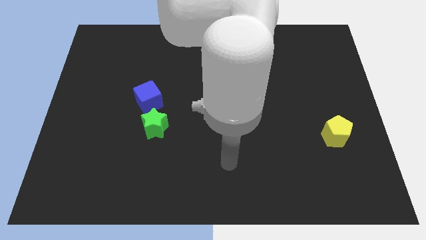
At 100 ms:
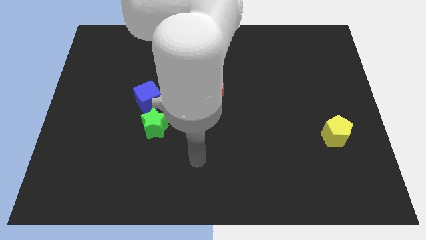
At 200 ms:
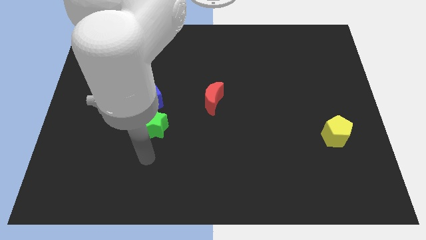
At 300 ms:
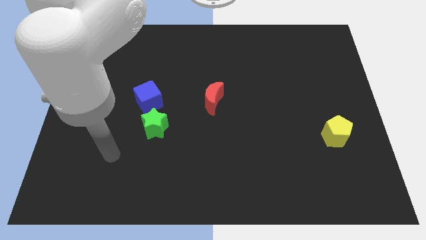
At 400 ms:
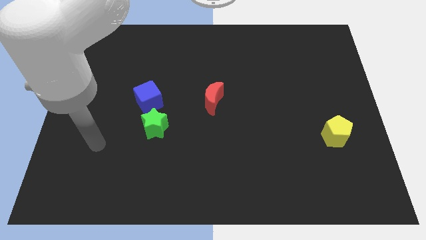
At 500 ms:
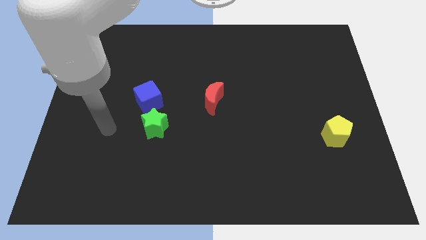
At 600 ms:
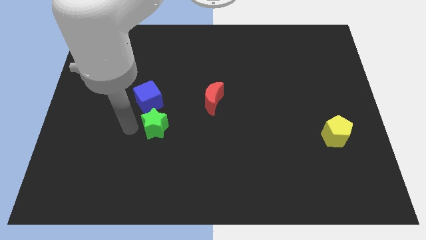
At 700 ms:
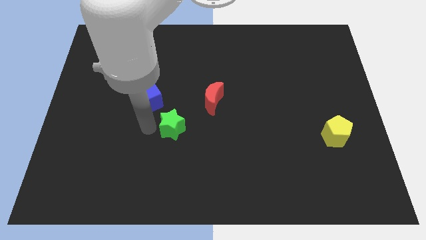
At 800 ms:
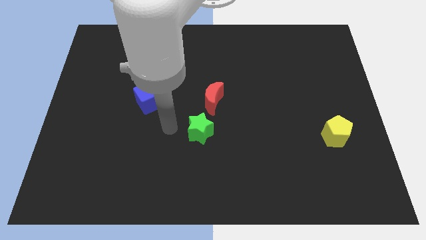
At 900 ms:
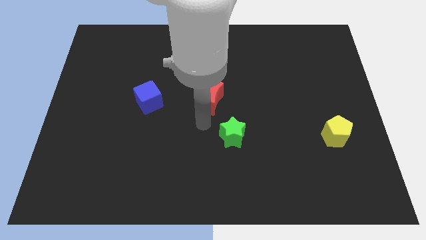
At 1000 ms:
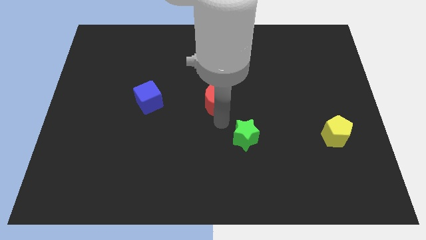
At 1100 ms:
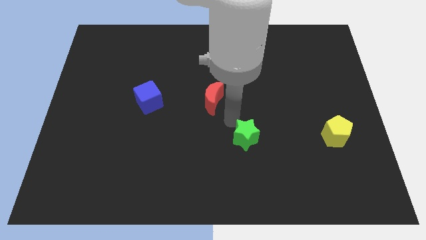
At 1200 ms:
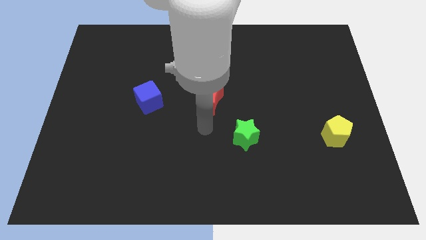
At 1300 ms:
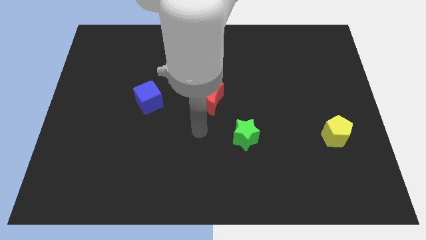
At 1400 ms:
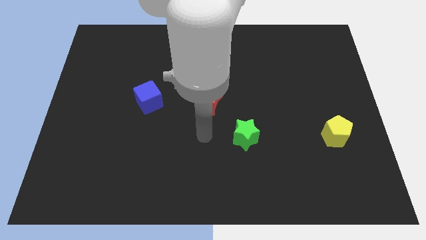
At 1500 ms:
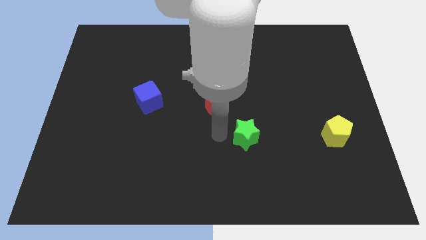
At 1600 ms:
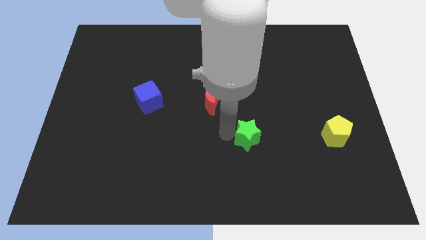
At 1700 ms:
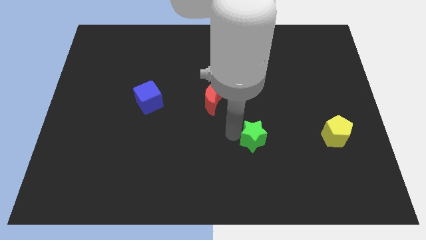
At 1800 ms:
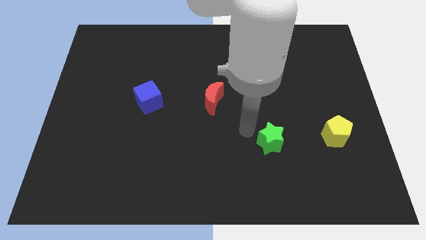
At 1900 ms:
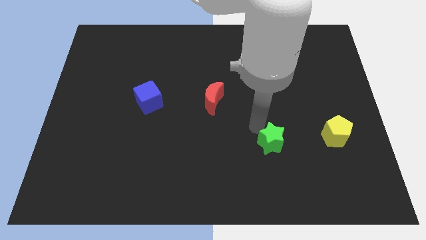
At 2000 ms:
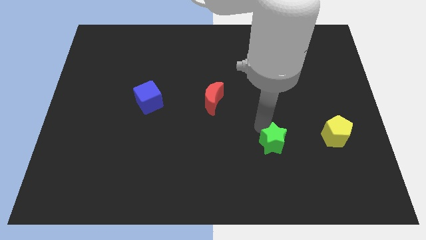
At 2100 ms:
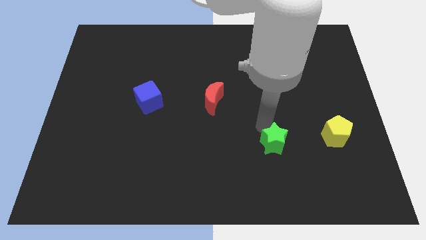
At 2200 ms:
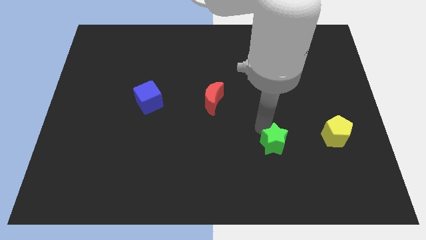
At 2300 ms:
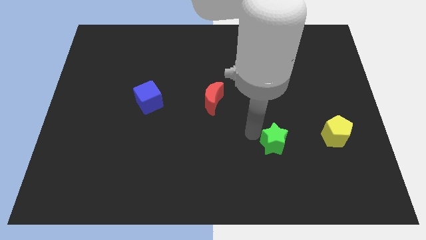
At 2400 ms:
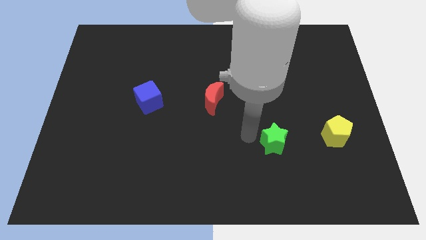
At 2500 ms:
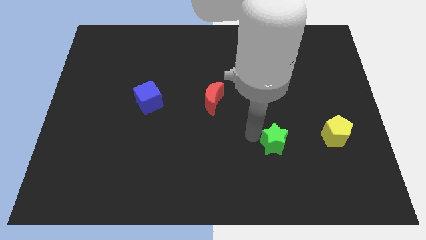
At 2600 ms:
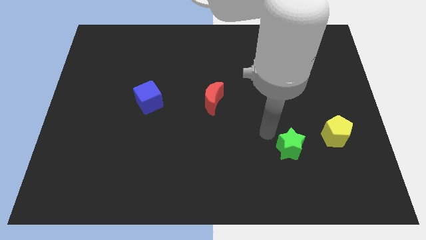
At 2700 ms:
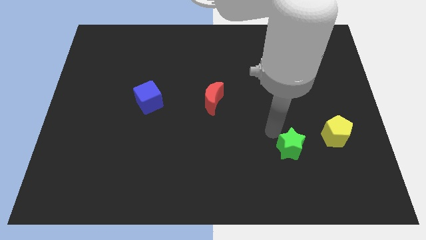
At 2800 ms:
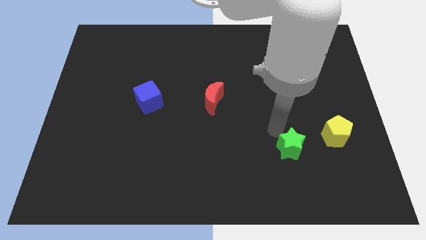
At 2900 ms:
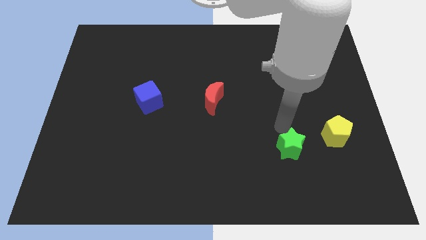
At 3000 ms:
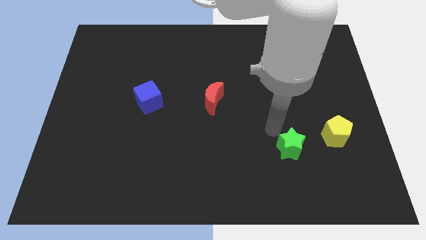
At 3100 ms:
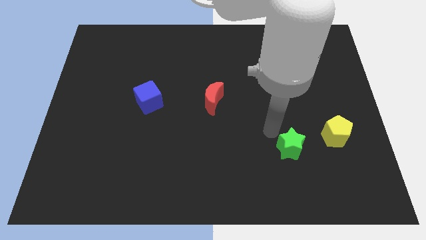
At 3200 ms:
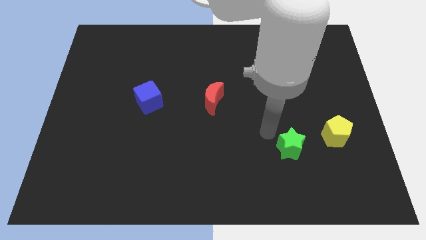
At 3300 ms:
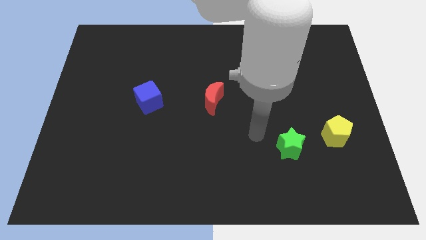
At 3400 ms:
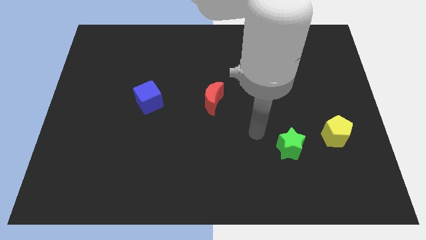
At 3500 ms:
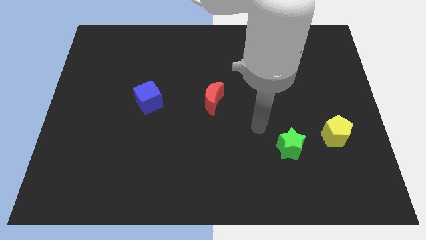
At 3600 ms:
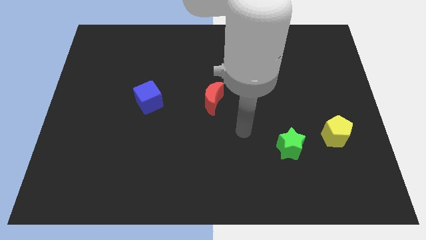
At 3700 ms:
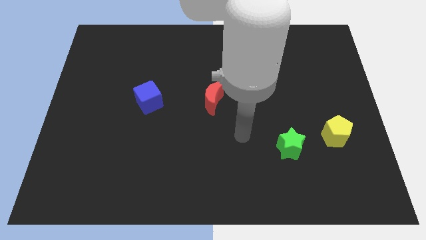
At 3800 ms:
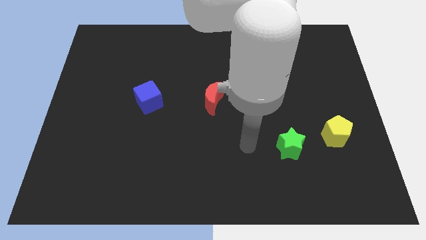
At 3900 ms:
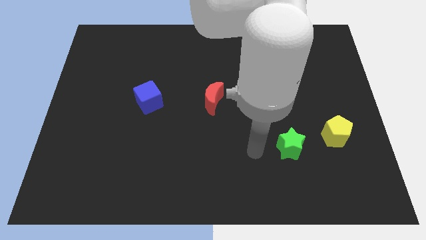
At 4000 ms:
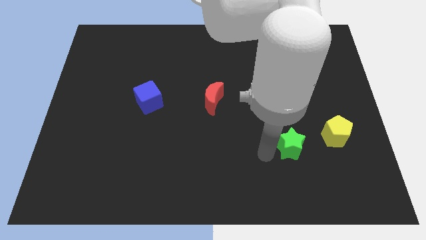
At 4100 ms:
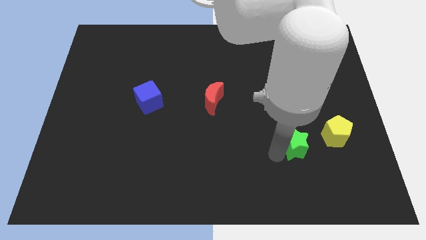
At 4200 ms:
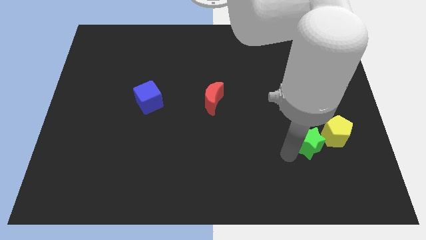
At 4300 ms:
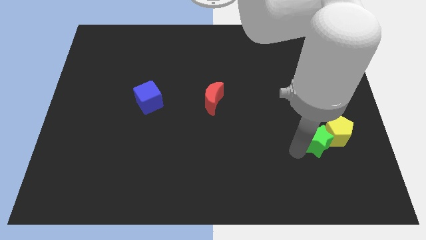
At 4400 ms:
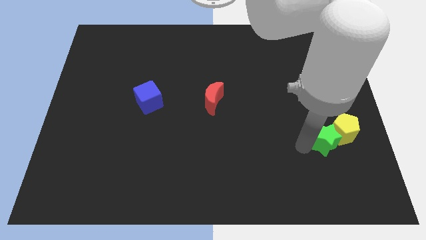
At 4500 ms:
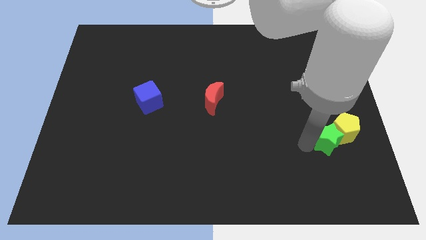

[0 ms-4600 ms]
move the green star next to the yellow pentagon

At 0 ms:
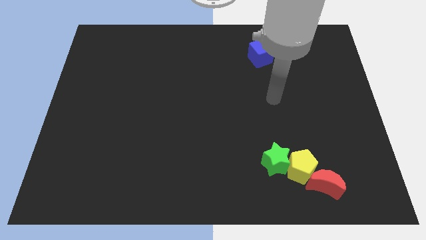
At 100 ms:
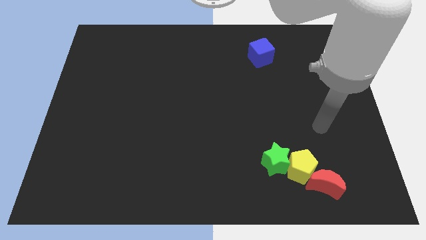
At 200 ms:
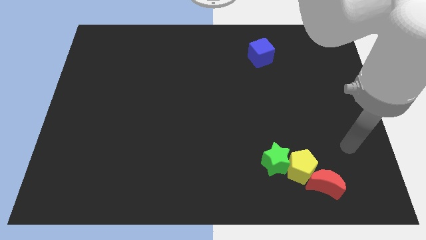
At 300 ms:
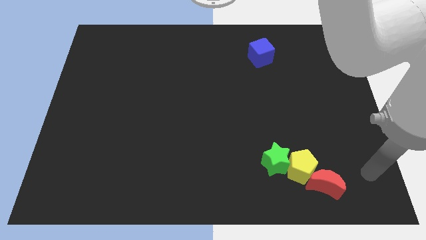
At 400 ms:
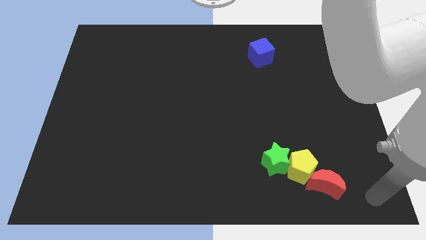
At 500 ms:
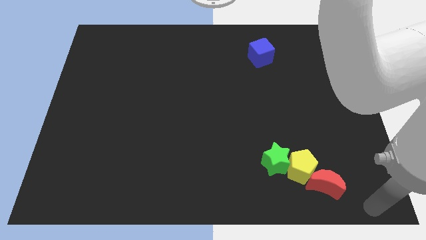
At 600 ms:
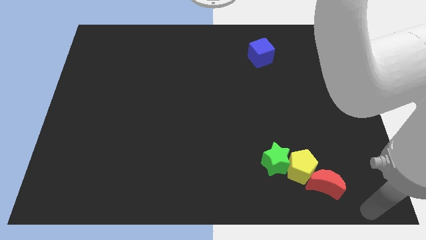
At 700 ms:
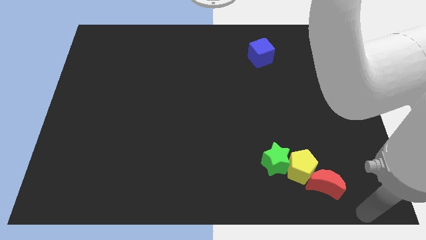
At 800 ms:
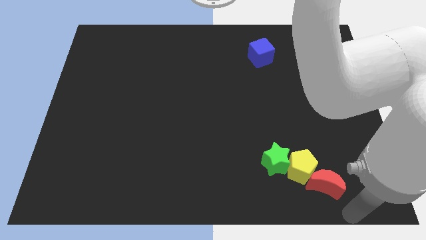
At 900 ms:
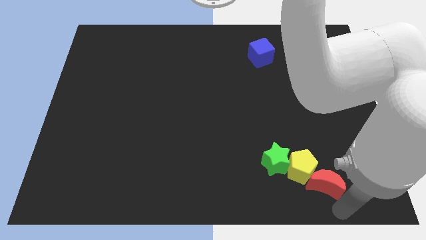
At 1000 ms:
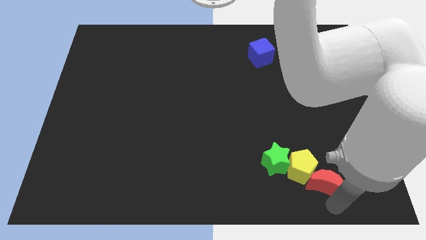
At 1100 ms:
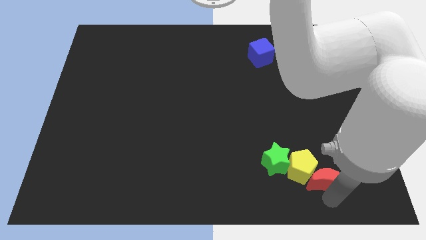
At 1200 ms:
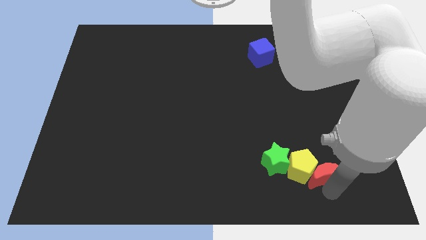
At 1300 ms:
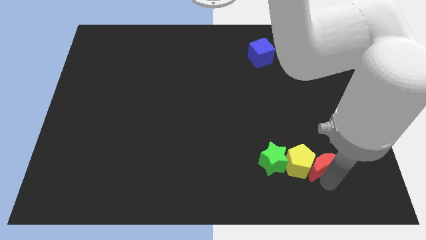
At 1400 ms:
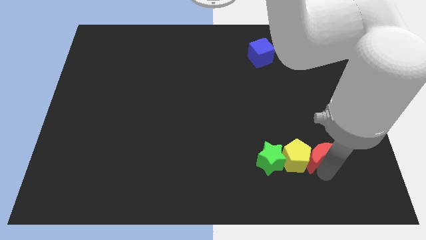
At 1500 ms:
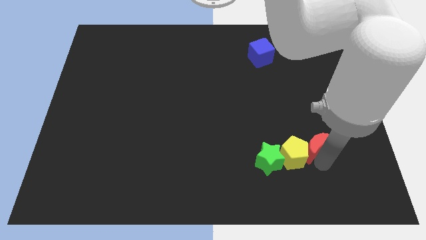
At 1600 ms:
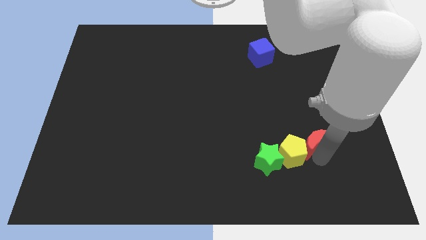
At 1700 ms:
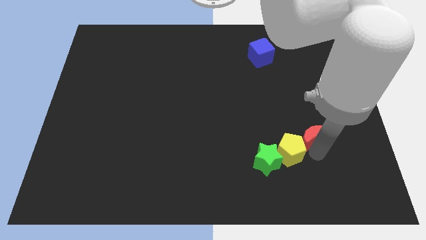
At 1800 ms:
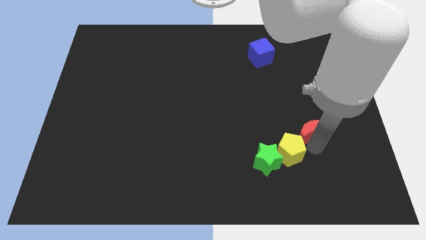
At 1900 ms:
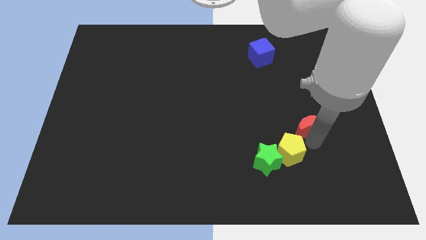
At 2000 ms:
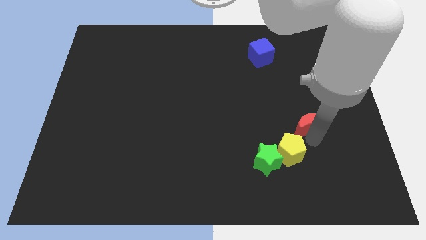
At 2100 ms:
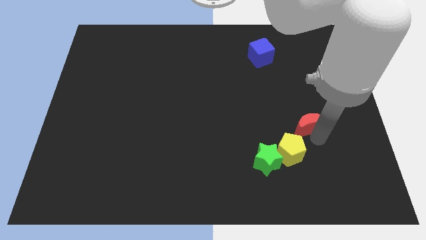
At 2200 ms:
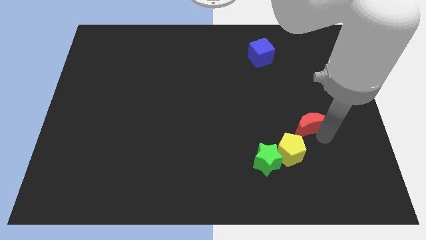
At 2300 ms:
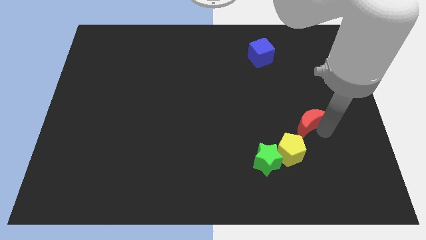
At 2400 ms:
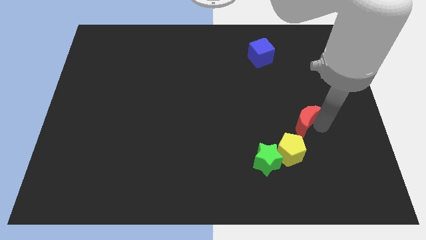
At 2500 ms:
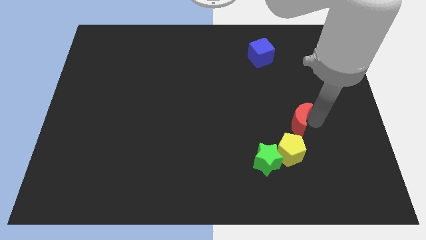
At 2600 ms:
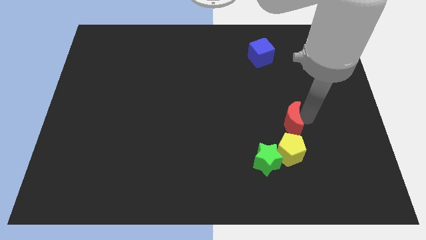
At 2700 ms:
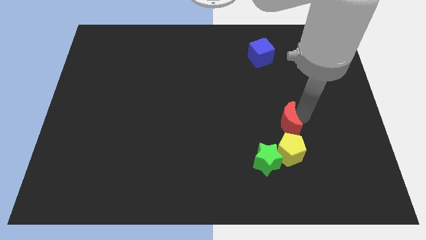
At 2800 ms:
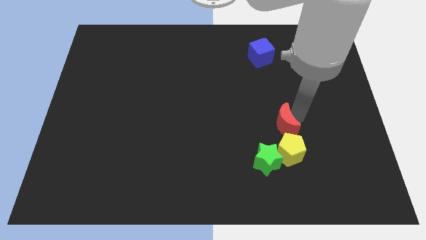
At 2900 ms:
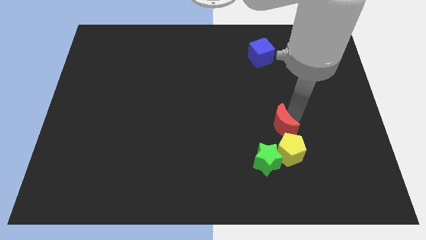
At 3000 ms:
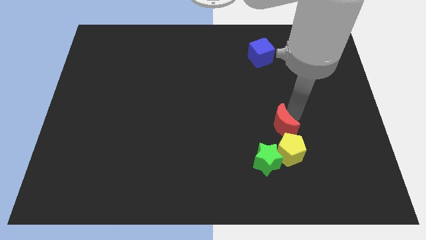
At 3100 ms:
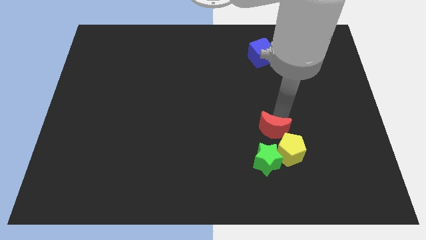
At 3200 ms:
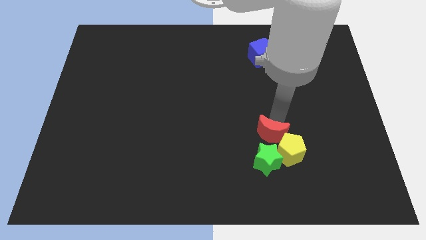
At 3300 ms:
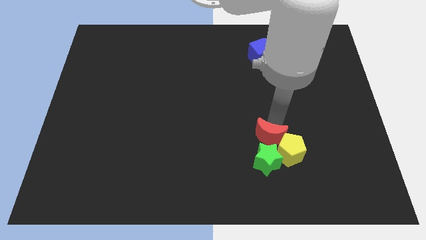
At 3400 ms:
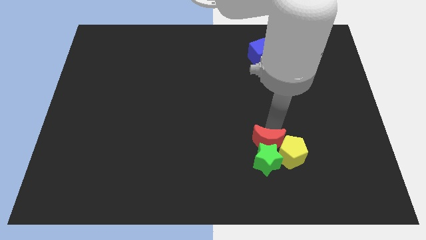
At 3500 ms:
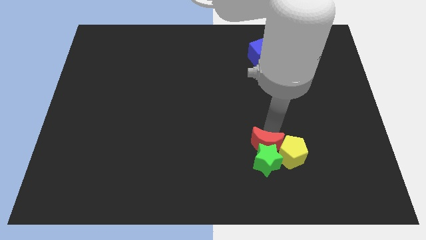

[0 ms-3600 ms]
put the red moon towards the star
